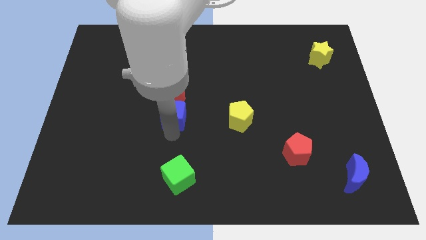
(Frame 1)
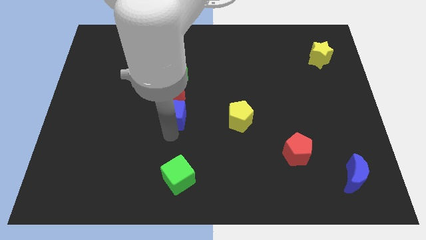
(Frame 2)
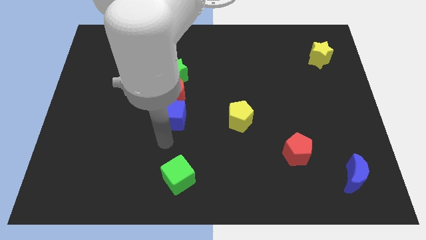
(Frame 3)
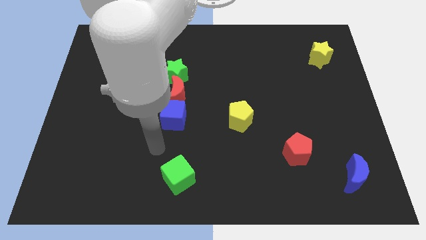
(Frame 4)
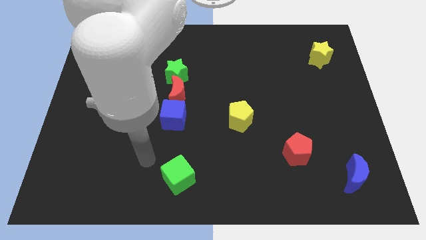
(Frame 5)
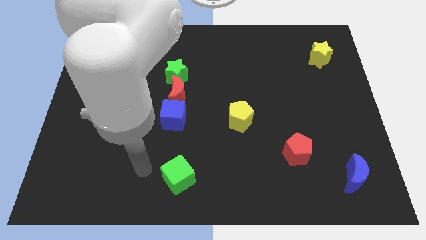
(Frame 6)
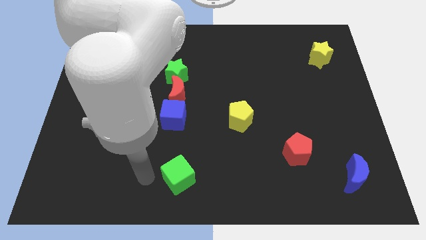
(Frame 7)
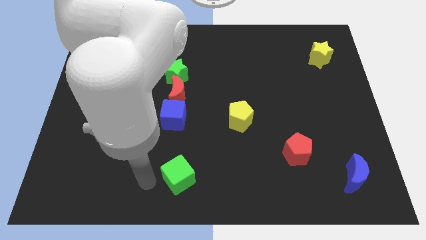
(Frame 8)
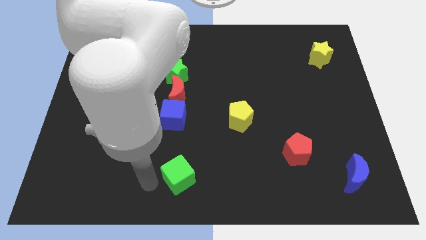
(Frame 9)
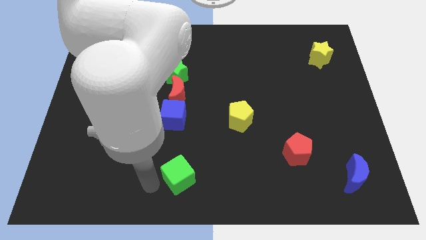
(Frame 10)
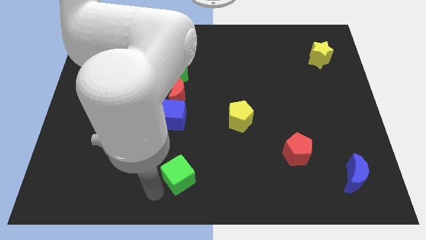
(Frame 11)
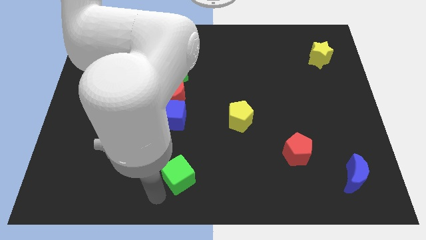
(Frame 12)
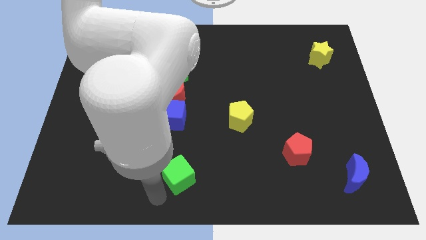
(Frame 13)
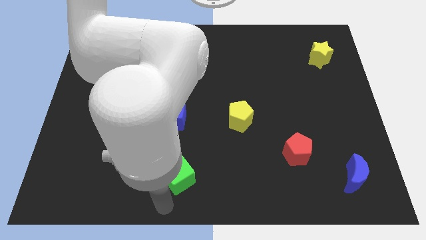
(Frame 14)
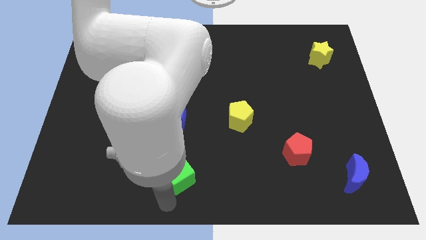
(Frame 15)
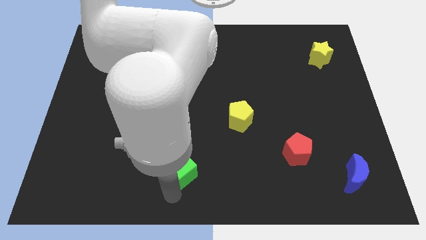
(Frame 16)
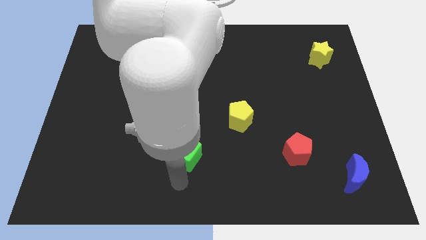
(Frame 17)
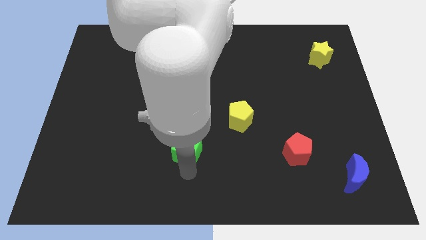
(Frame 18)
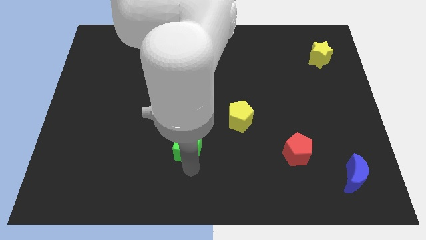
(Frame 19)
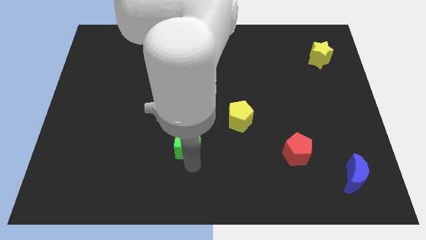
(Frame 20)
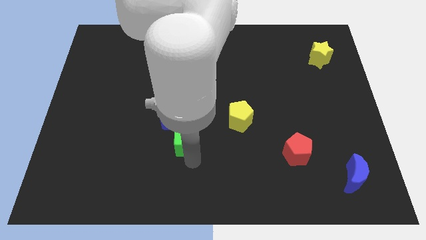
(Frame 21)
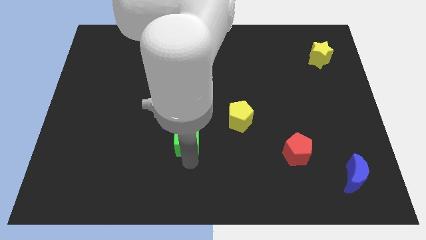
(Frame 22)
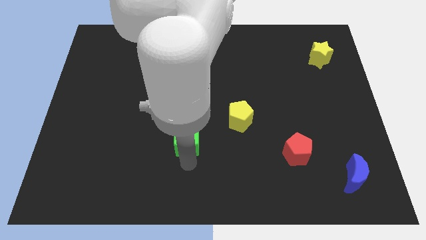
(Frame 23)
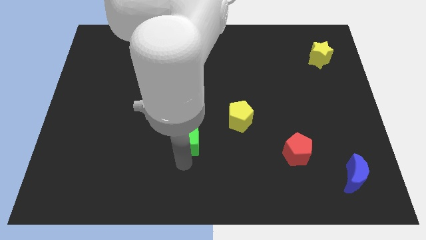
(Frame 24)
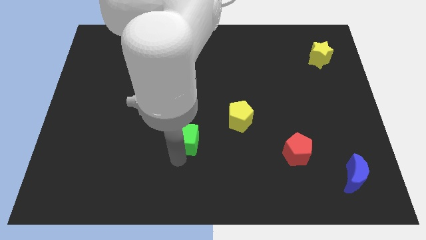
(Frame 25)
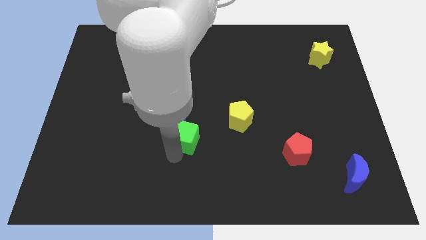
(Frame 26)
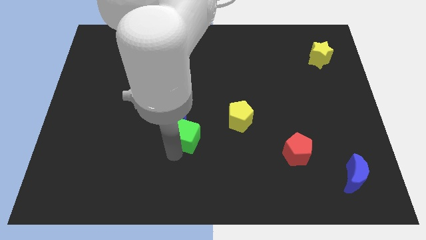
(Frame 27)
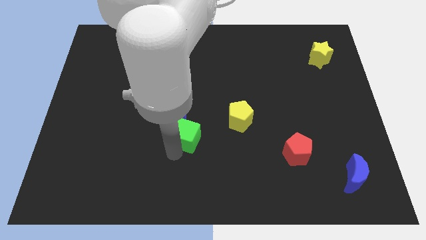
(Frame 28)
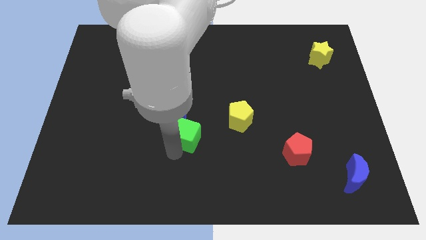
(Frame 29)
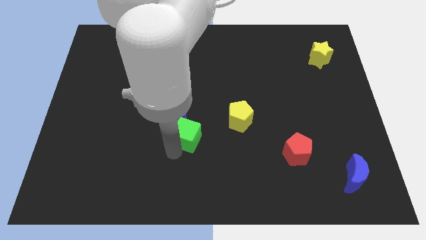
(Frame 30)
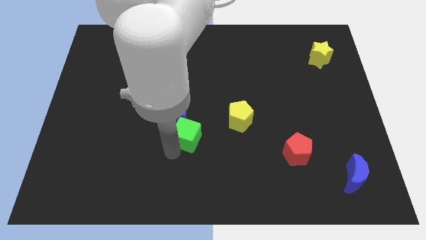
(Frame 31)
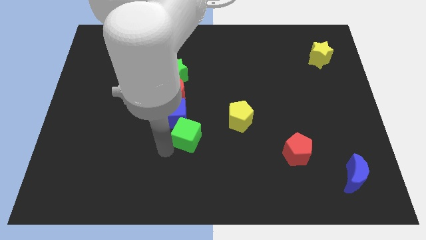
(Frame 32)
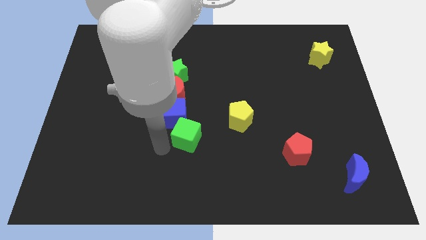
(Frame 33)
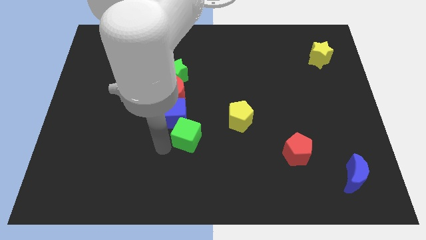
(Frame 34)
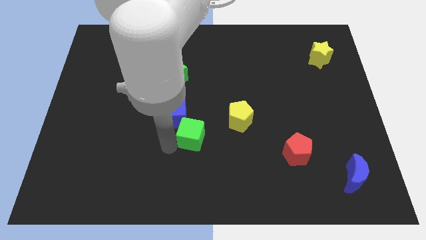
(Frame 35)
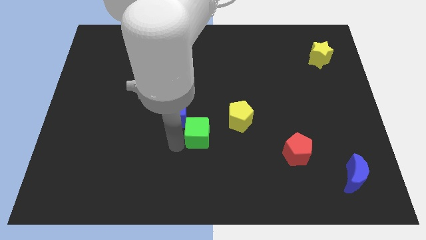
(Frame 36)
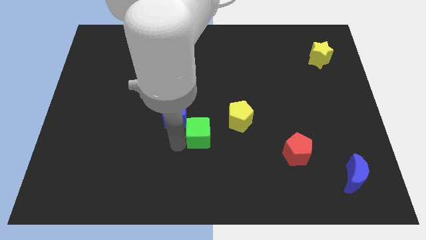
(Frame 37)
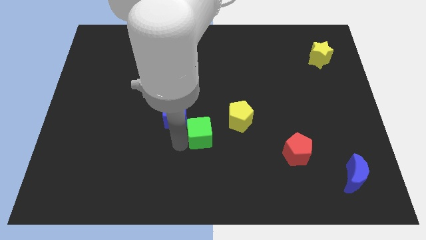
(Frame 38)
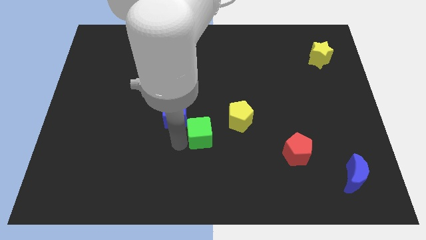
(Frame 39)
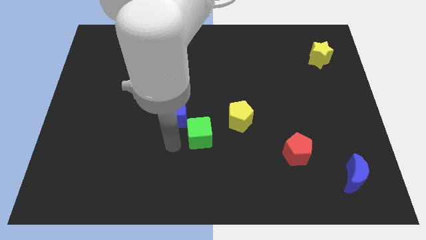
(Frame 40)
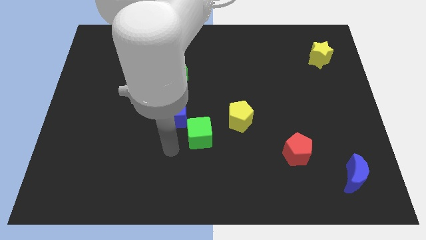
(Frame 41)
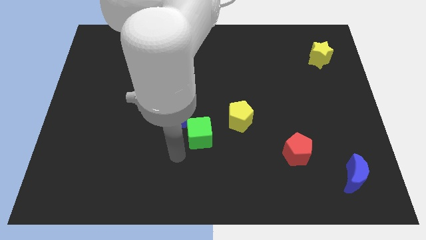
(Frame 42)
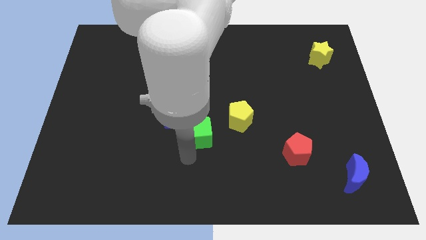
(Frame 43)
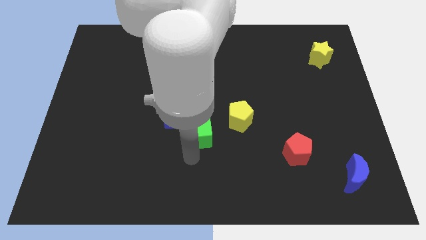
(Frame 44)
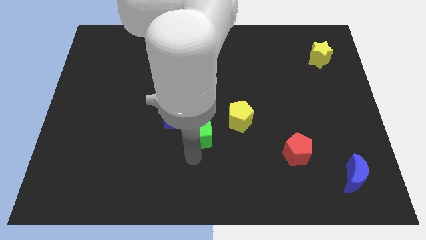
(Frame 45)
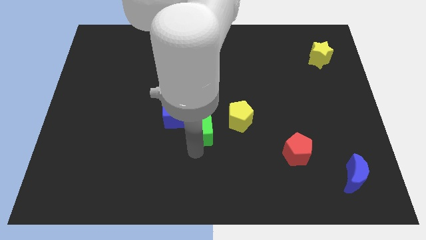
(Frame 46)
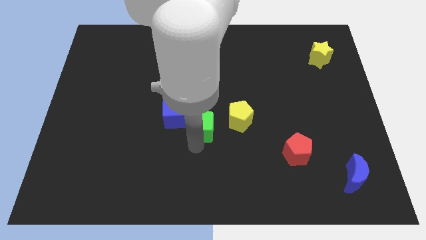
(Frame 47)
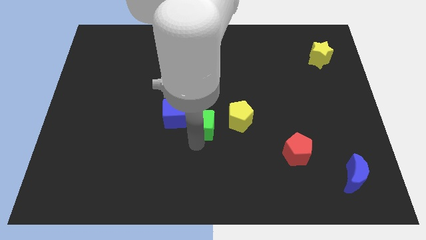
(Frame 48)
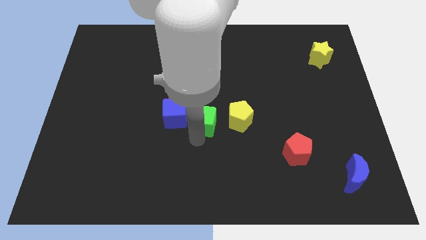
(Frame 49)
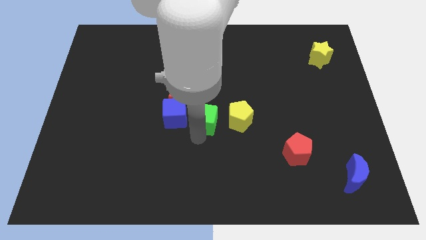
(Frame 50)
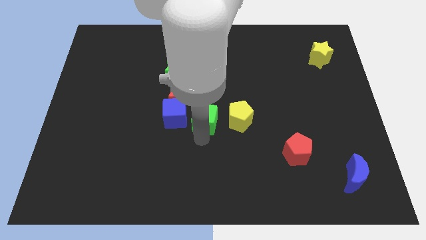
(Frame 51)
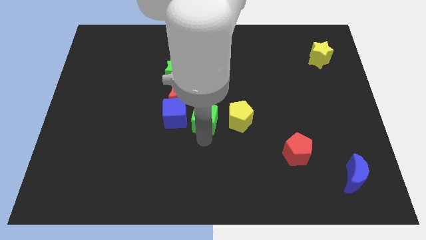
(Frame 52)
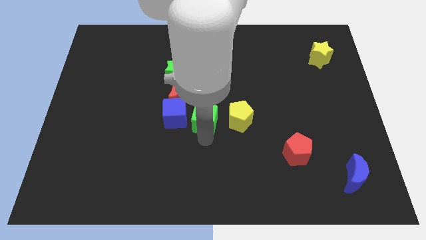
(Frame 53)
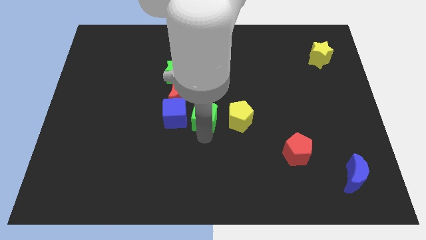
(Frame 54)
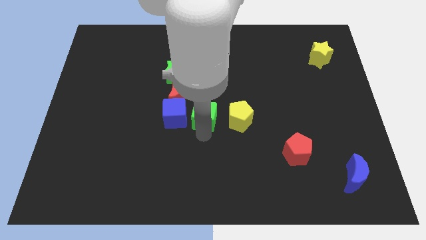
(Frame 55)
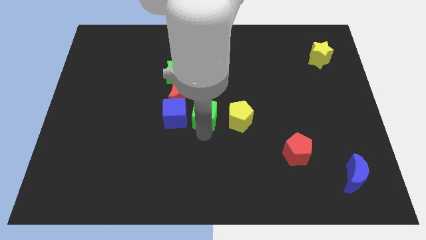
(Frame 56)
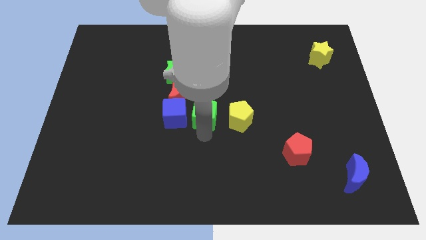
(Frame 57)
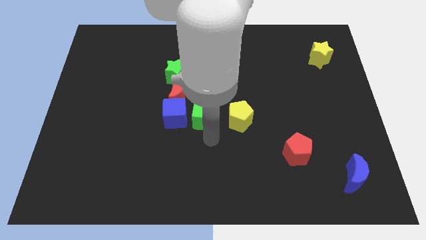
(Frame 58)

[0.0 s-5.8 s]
place the green cube in between the blue cube and yellow pentagon

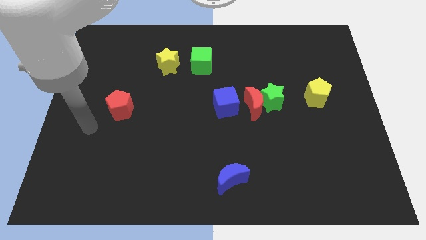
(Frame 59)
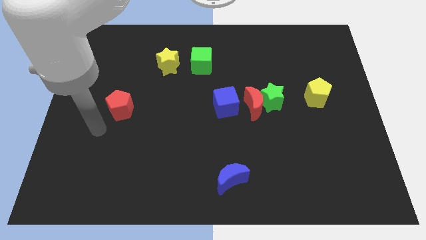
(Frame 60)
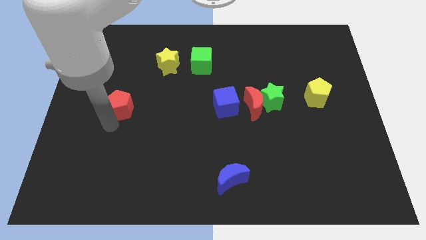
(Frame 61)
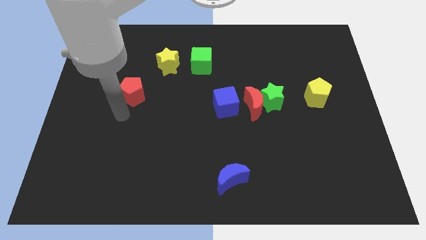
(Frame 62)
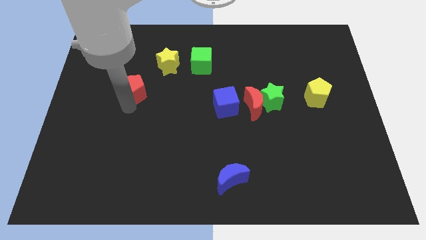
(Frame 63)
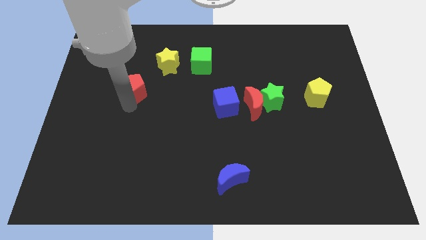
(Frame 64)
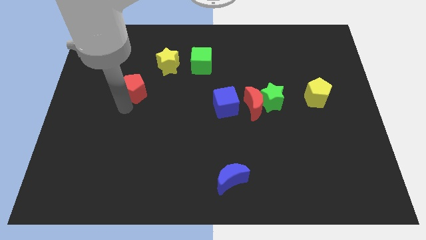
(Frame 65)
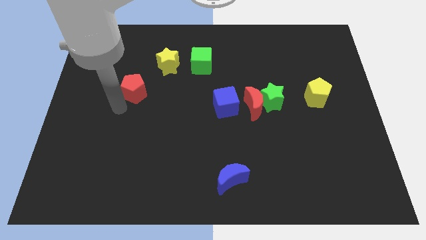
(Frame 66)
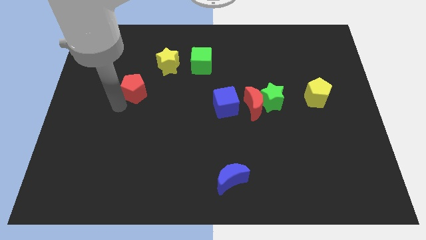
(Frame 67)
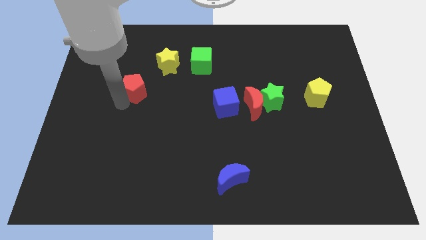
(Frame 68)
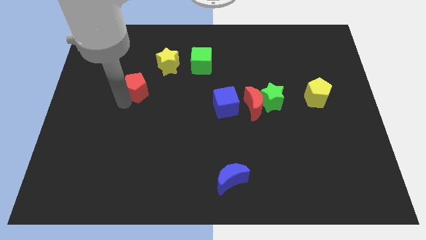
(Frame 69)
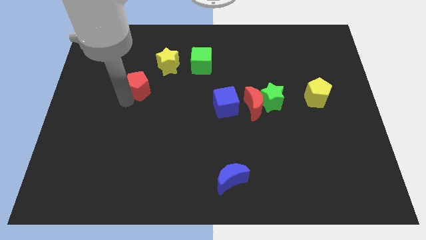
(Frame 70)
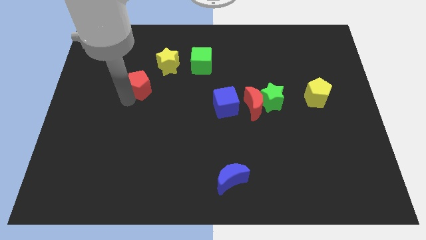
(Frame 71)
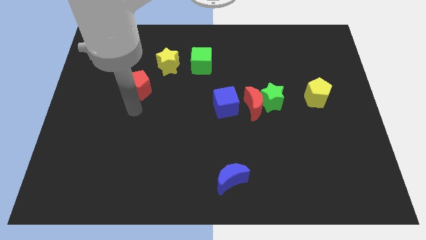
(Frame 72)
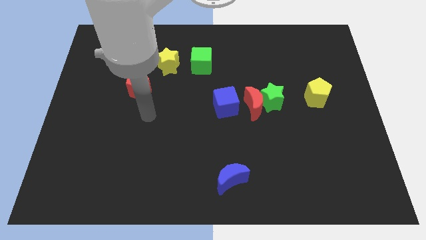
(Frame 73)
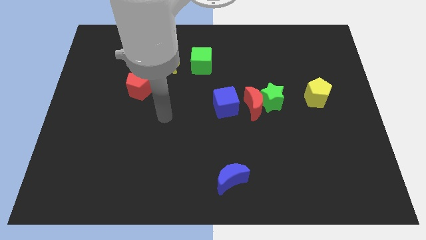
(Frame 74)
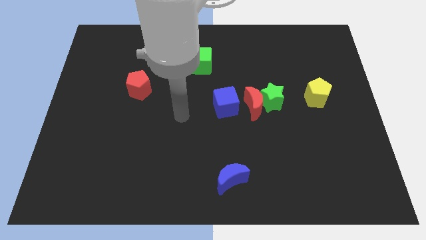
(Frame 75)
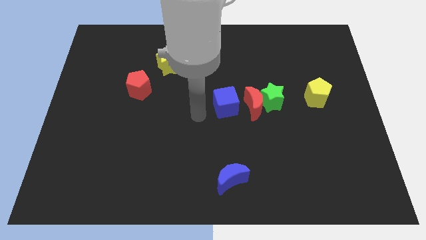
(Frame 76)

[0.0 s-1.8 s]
slightly move the red pentagon diagonal to the yellow star

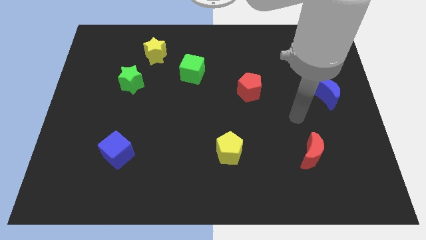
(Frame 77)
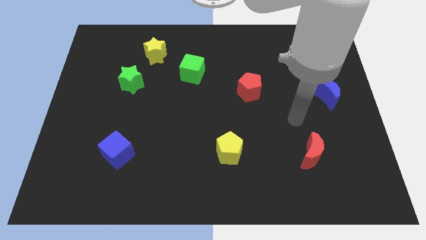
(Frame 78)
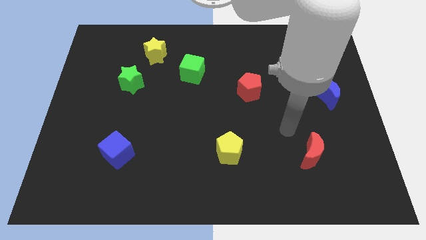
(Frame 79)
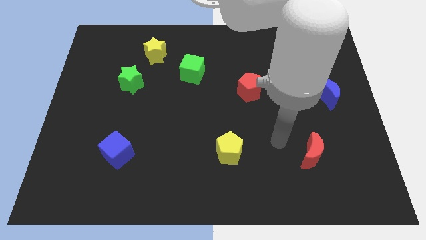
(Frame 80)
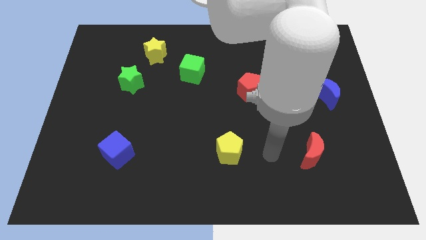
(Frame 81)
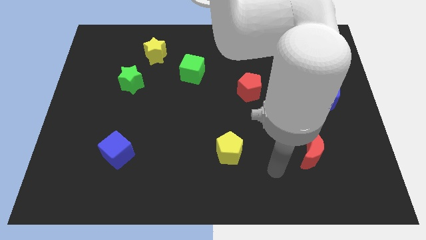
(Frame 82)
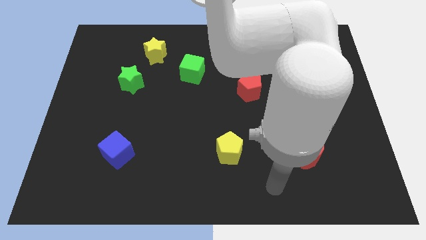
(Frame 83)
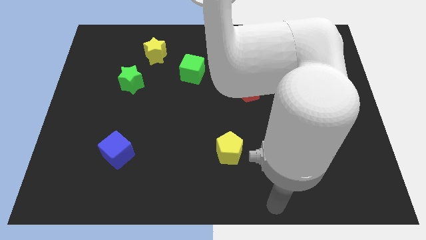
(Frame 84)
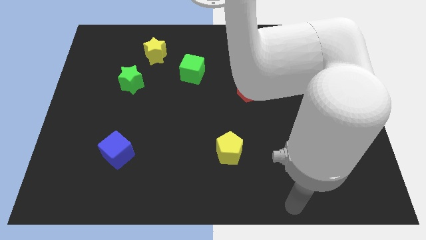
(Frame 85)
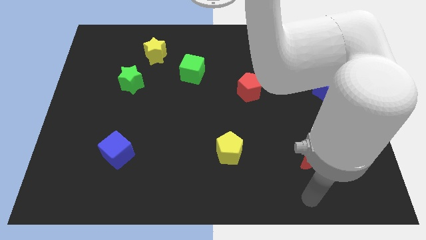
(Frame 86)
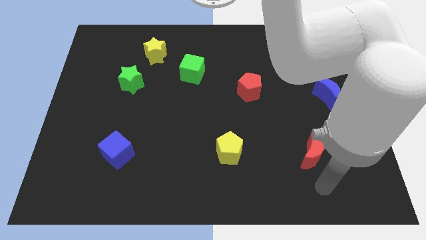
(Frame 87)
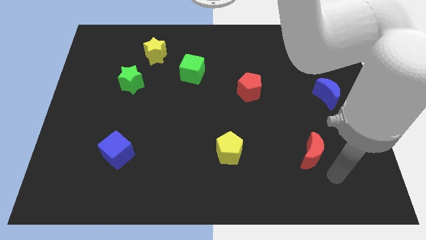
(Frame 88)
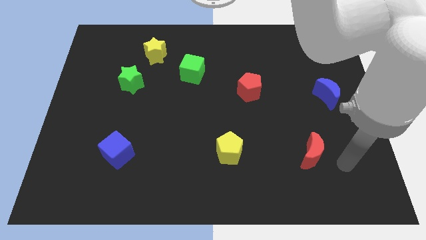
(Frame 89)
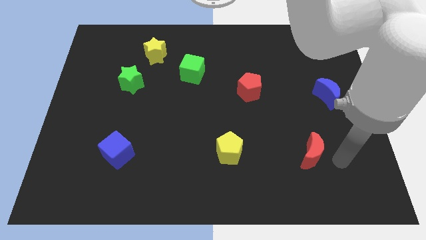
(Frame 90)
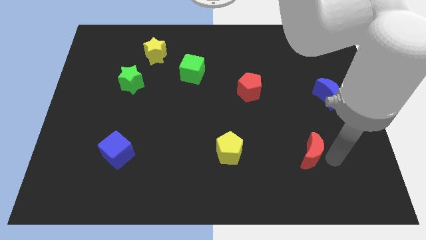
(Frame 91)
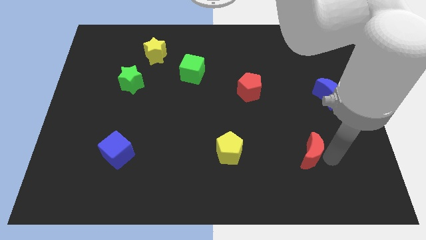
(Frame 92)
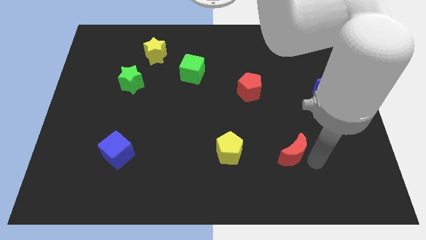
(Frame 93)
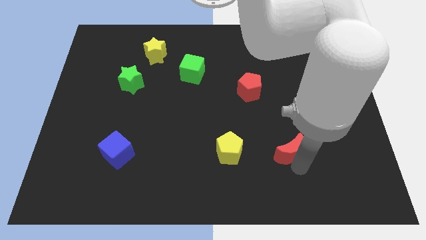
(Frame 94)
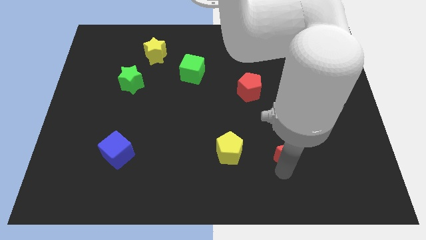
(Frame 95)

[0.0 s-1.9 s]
place the red moon parallel to the yellow pentagon
